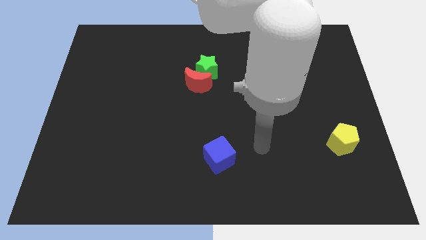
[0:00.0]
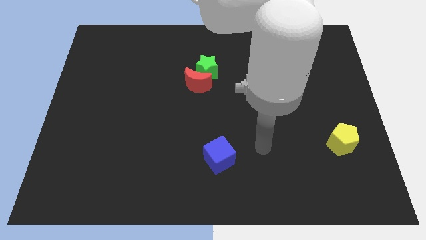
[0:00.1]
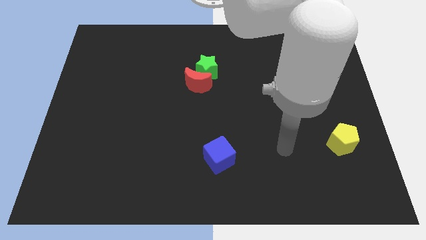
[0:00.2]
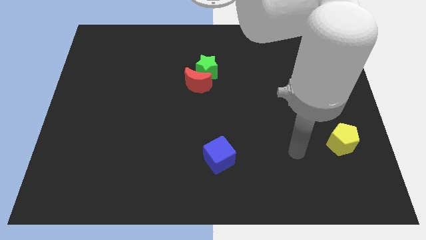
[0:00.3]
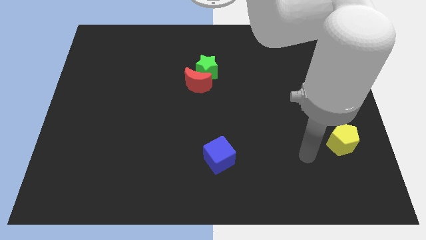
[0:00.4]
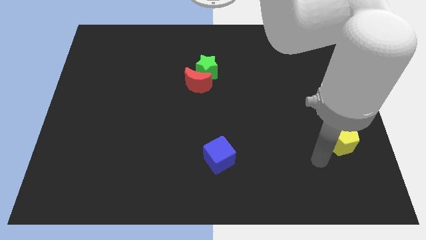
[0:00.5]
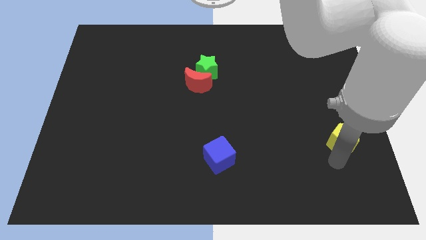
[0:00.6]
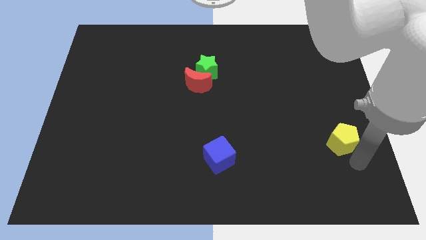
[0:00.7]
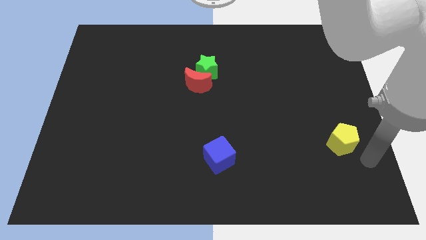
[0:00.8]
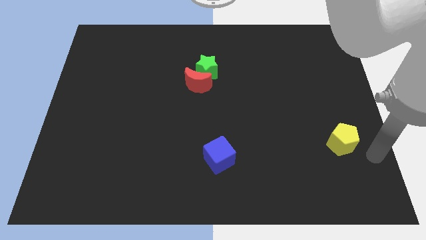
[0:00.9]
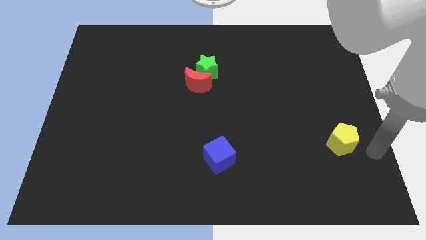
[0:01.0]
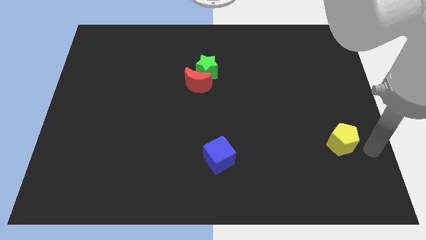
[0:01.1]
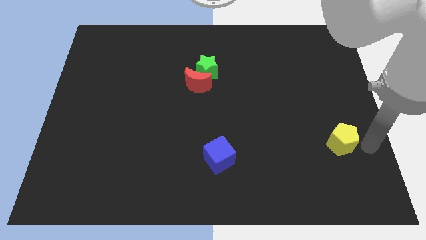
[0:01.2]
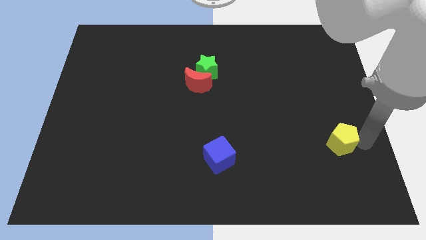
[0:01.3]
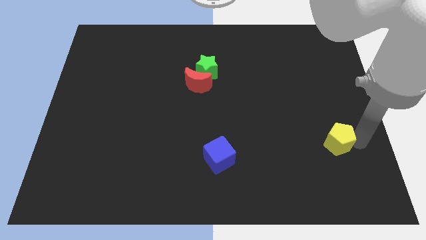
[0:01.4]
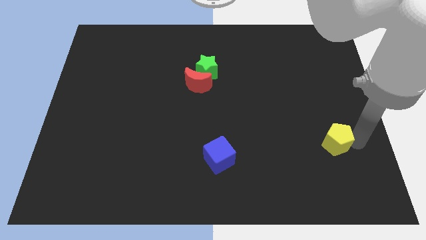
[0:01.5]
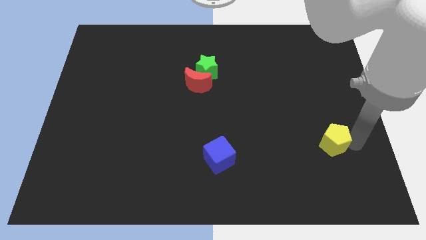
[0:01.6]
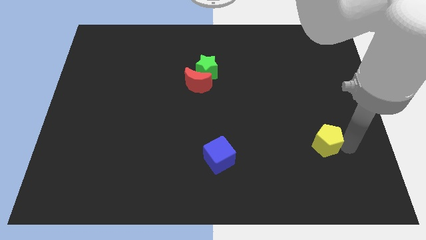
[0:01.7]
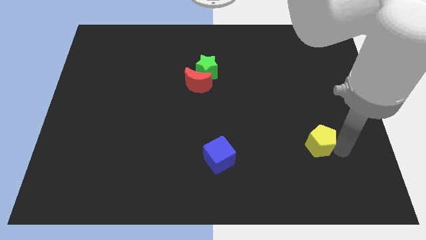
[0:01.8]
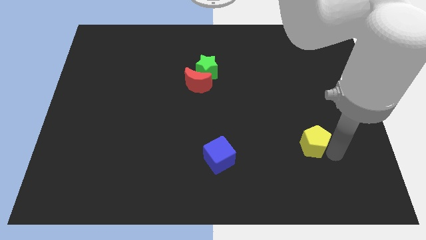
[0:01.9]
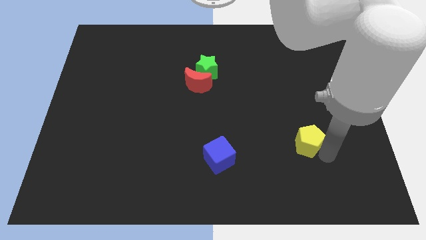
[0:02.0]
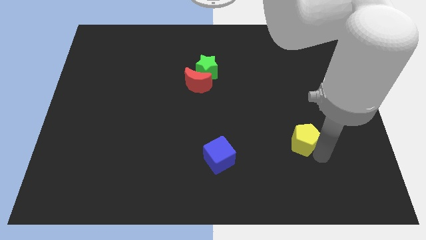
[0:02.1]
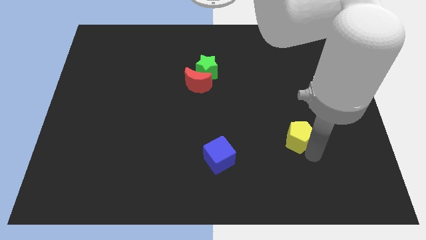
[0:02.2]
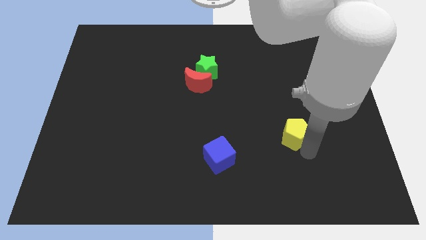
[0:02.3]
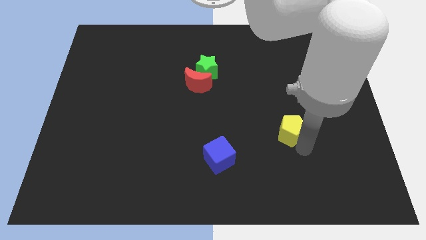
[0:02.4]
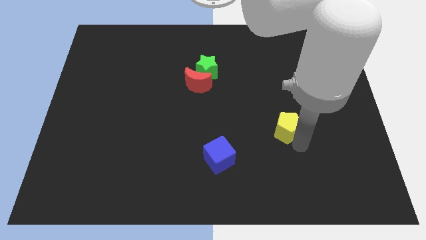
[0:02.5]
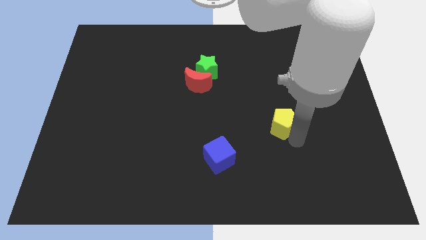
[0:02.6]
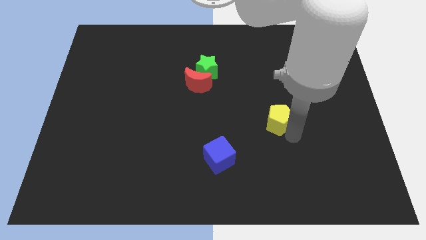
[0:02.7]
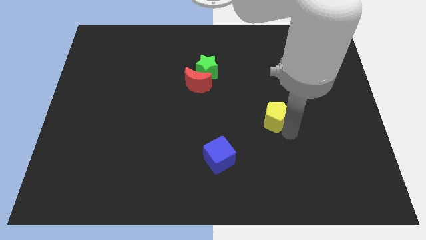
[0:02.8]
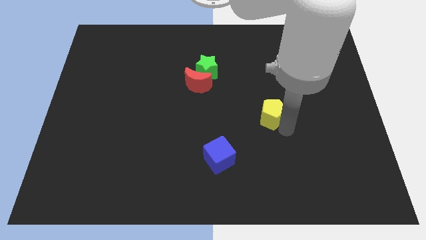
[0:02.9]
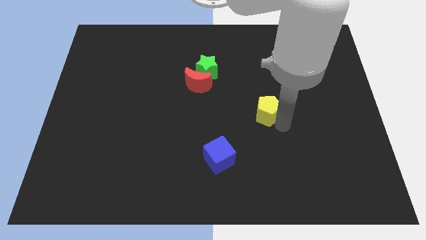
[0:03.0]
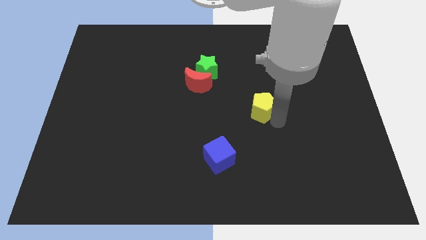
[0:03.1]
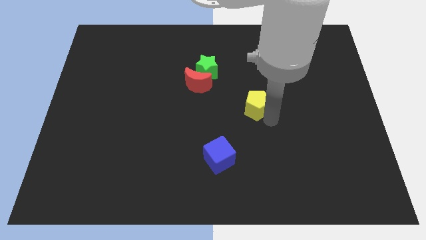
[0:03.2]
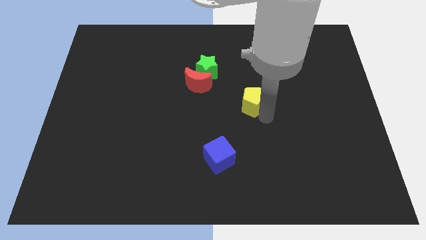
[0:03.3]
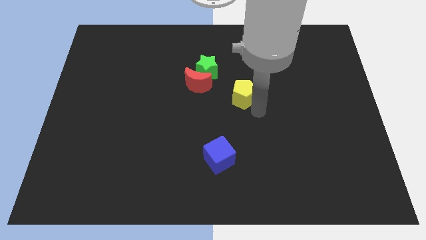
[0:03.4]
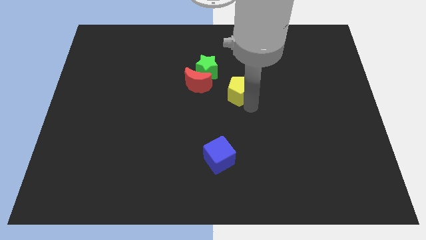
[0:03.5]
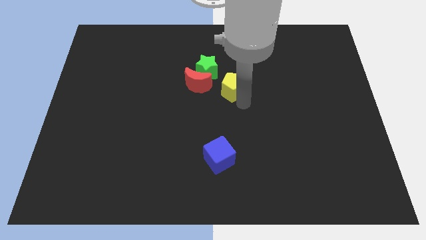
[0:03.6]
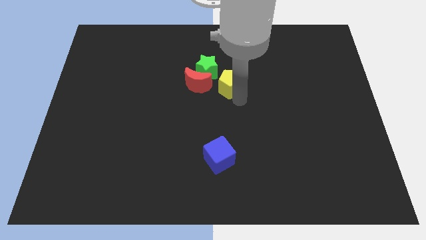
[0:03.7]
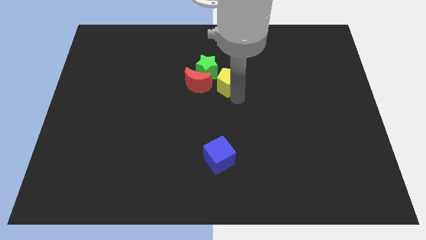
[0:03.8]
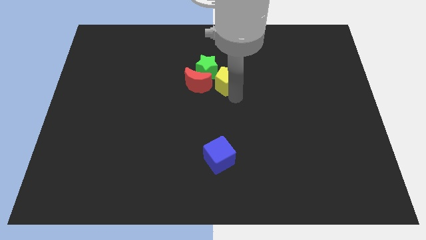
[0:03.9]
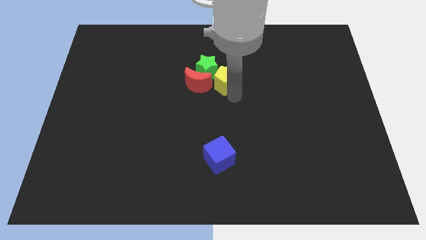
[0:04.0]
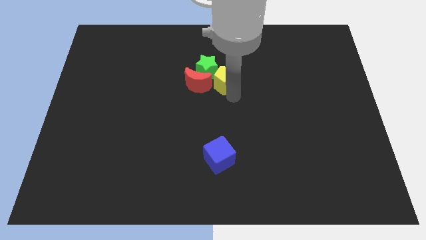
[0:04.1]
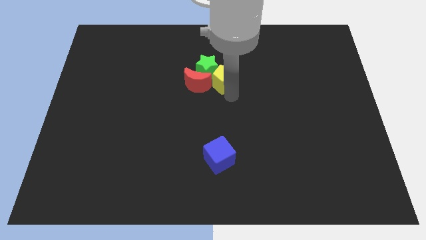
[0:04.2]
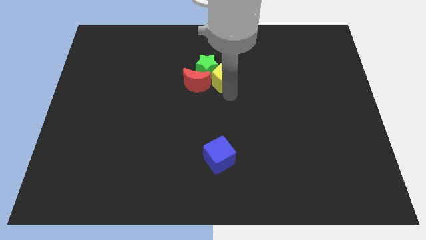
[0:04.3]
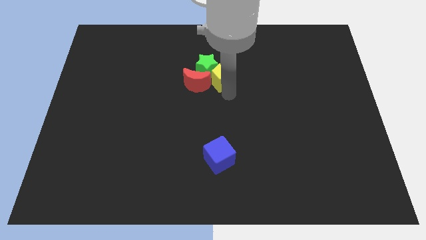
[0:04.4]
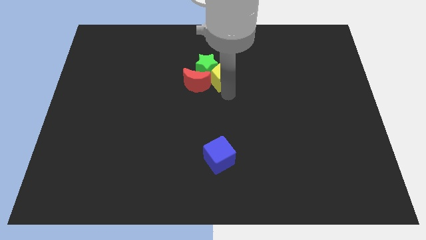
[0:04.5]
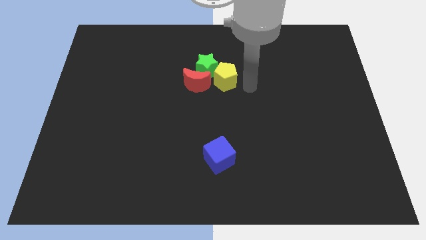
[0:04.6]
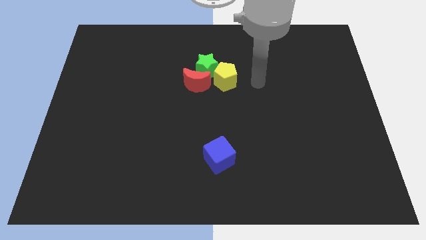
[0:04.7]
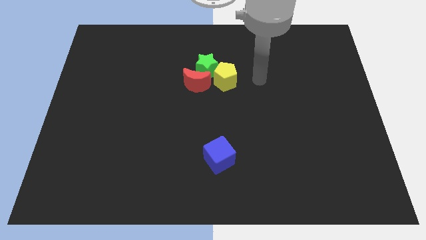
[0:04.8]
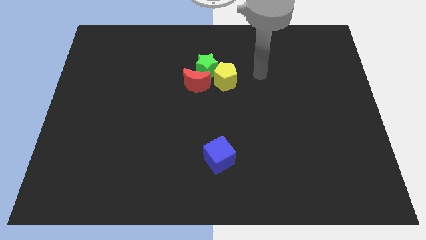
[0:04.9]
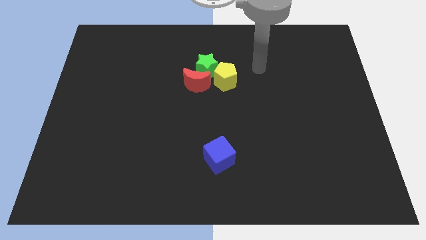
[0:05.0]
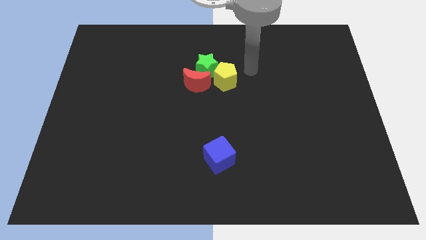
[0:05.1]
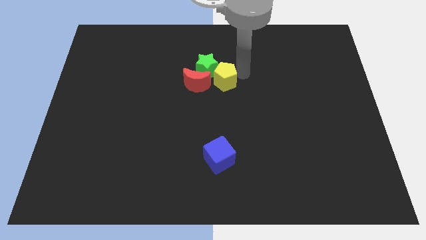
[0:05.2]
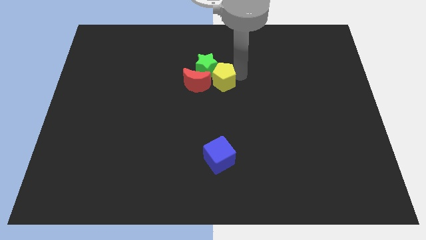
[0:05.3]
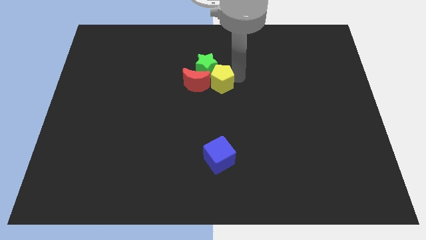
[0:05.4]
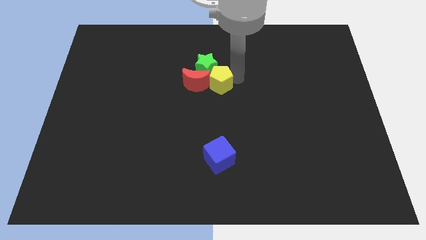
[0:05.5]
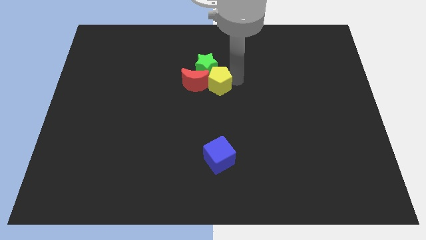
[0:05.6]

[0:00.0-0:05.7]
slide the yellow pentagon towards the red block

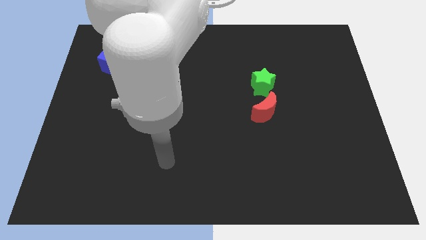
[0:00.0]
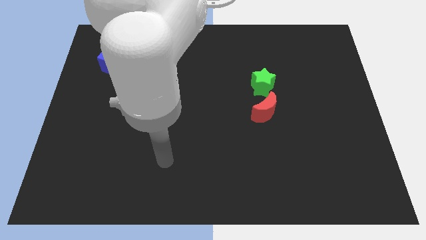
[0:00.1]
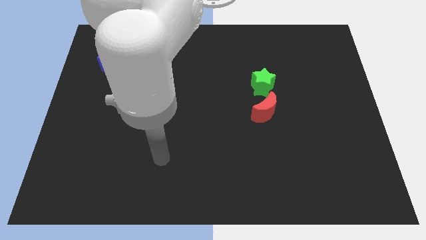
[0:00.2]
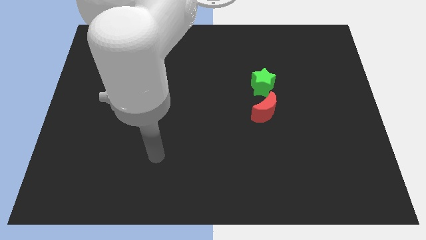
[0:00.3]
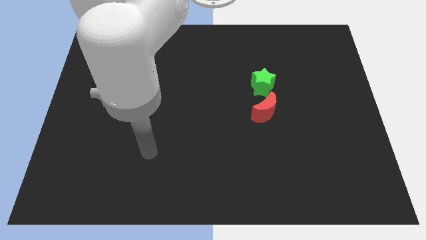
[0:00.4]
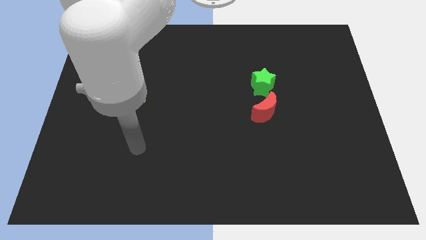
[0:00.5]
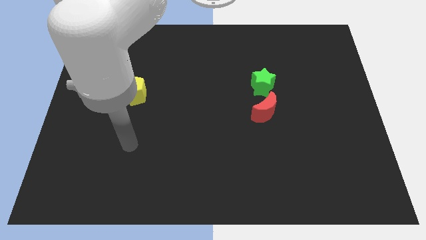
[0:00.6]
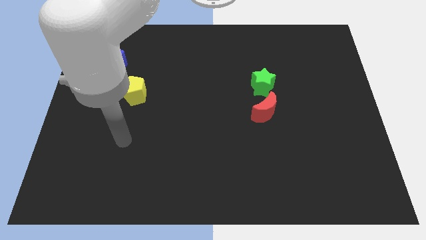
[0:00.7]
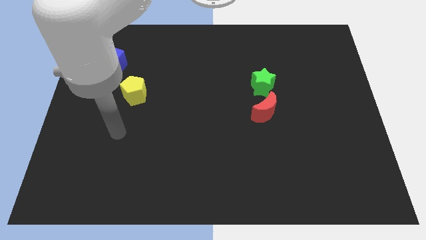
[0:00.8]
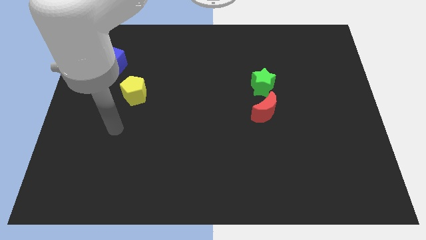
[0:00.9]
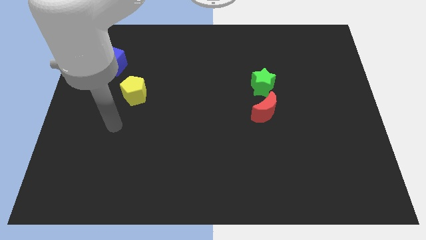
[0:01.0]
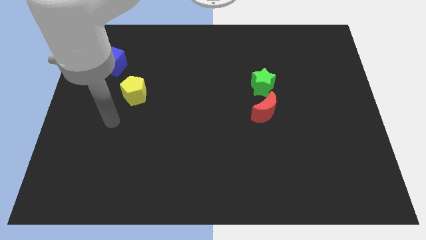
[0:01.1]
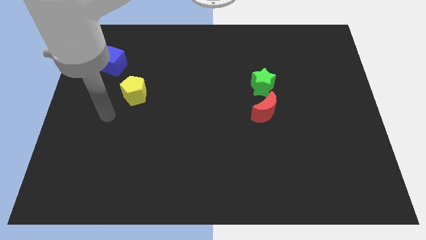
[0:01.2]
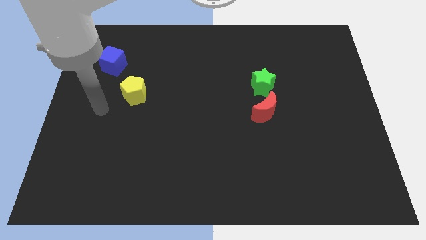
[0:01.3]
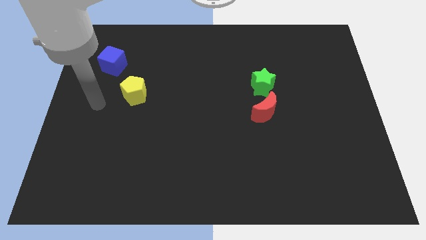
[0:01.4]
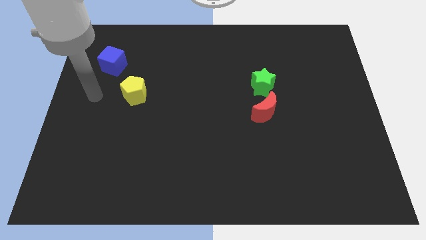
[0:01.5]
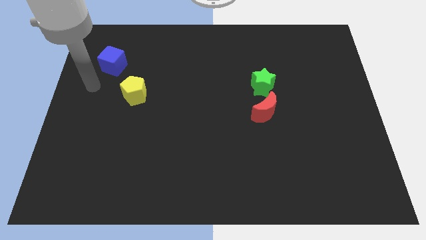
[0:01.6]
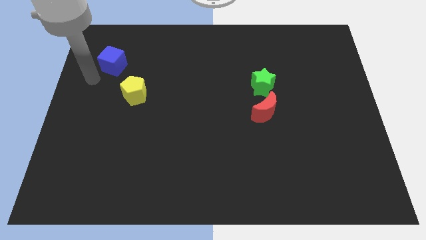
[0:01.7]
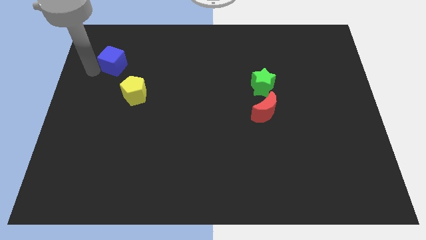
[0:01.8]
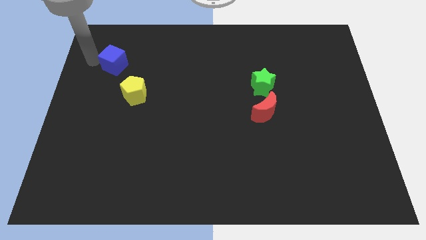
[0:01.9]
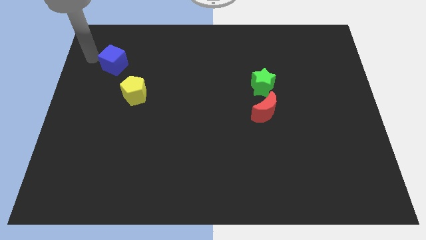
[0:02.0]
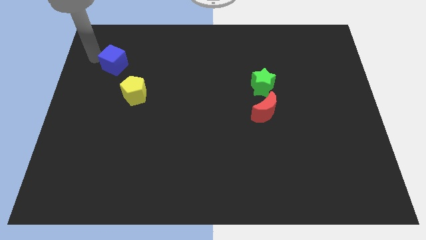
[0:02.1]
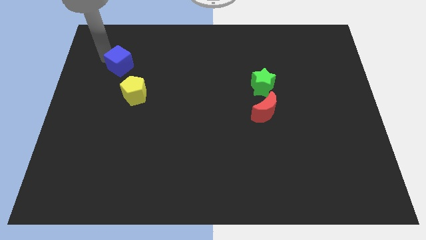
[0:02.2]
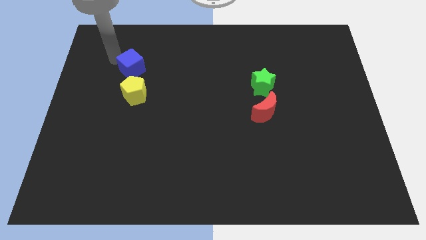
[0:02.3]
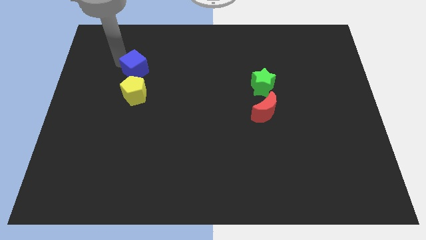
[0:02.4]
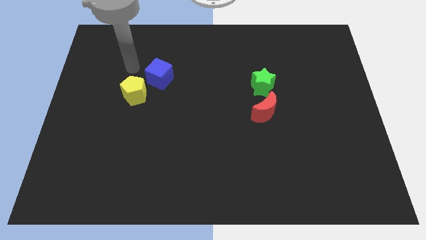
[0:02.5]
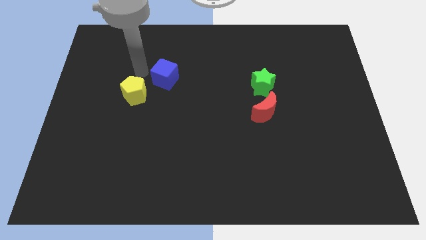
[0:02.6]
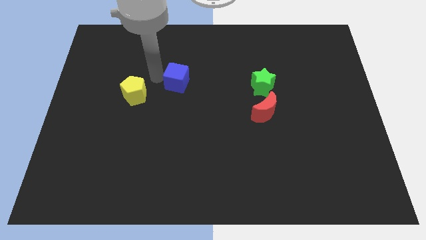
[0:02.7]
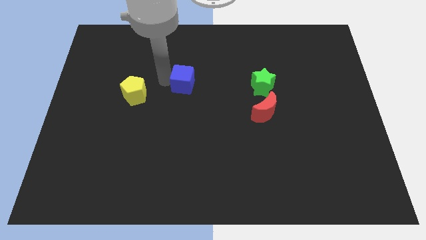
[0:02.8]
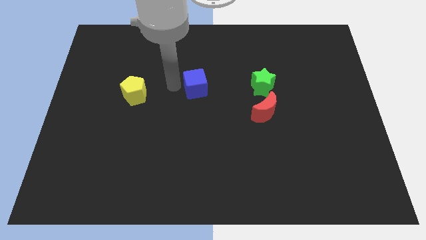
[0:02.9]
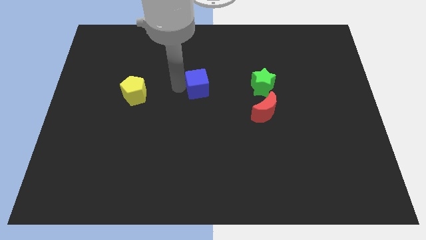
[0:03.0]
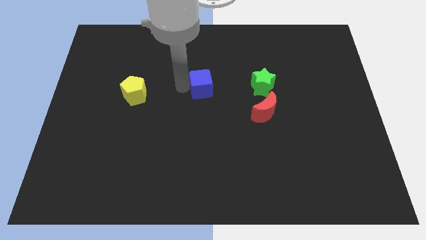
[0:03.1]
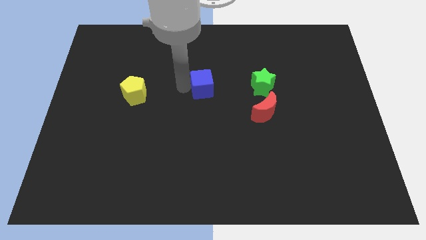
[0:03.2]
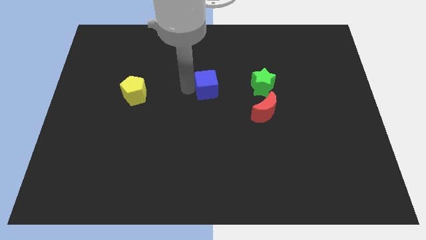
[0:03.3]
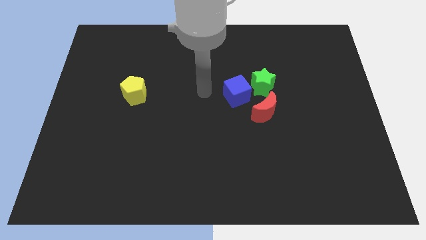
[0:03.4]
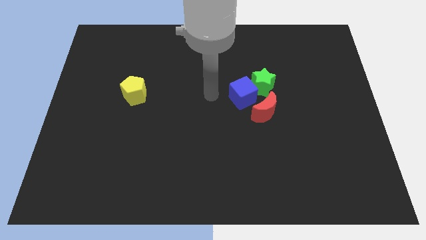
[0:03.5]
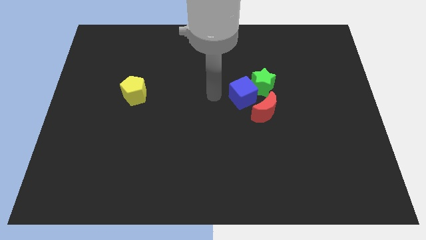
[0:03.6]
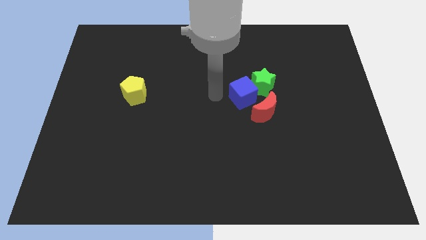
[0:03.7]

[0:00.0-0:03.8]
push the blue cube close to the green block
